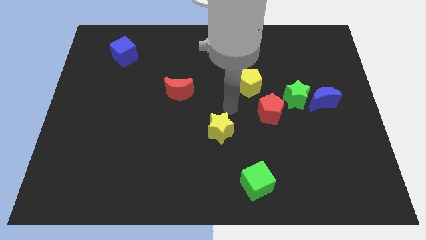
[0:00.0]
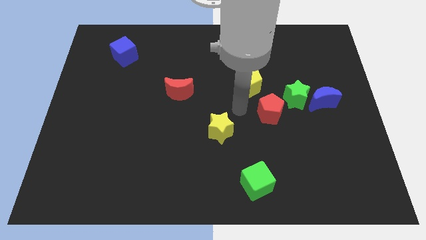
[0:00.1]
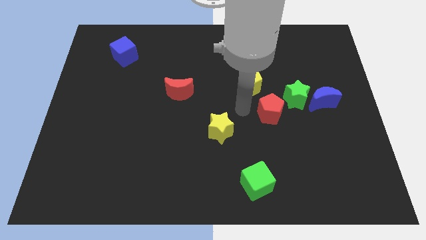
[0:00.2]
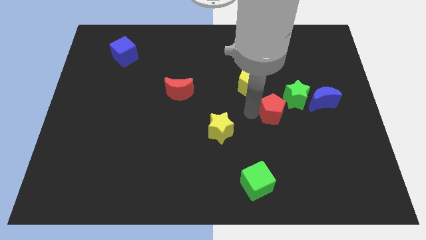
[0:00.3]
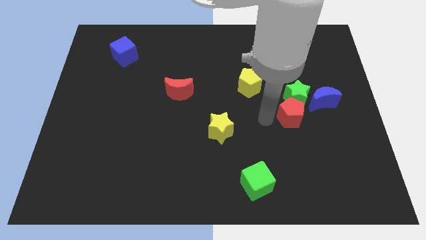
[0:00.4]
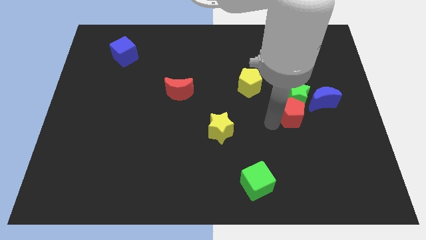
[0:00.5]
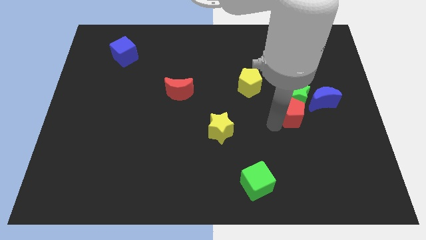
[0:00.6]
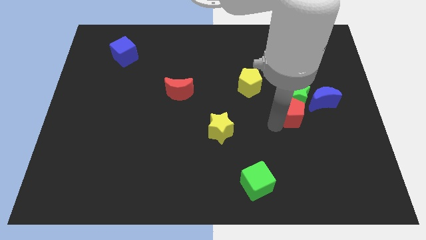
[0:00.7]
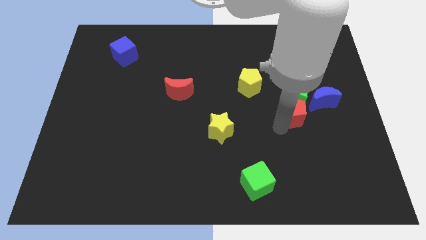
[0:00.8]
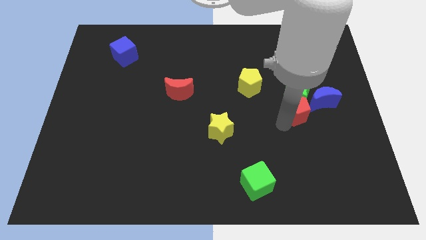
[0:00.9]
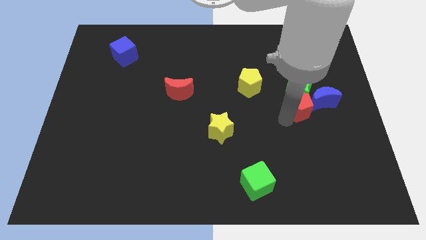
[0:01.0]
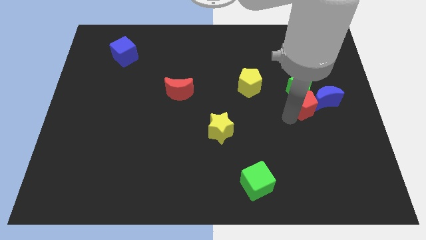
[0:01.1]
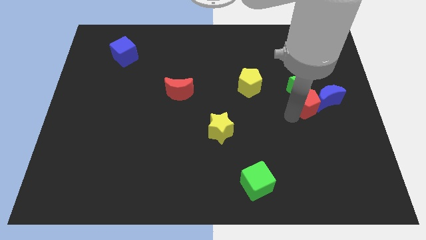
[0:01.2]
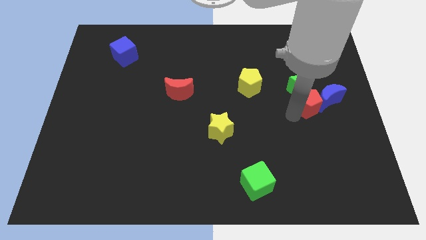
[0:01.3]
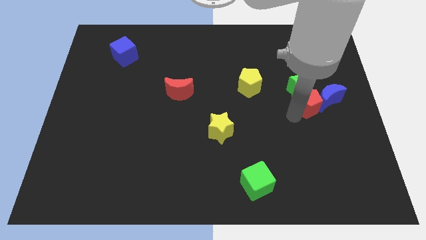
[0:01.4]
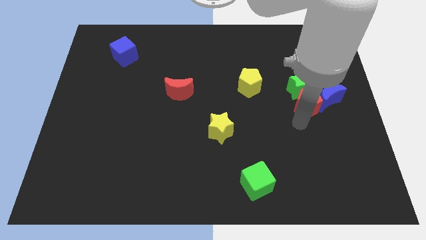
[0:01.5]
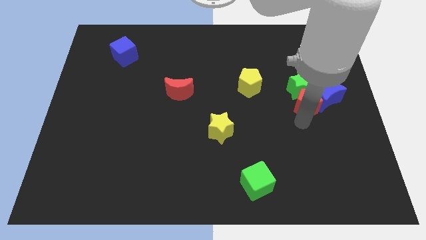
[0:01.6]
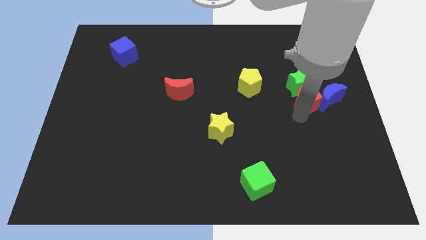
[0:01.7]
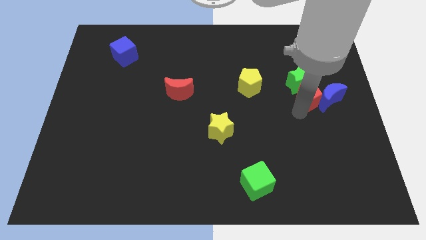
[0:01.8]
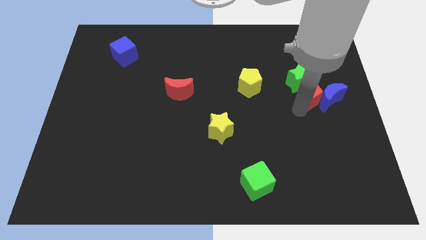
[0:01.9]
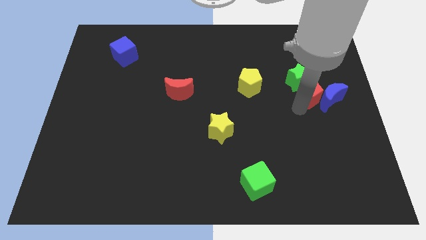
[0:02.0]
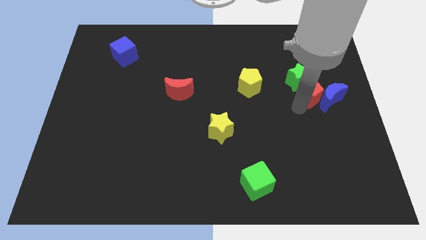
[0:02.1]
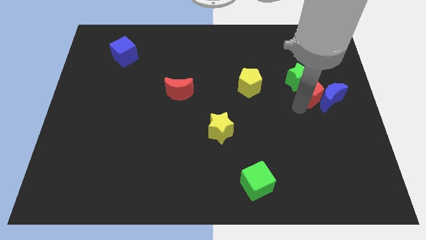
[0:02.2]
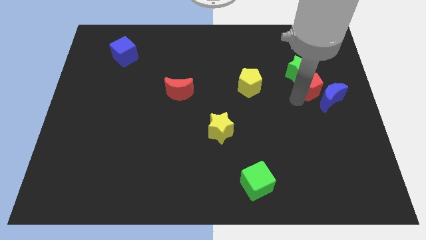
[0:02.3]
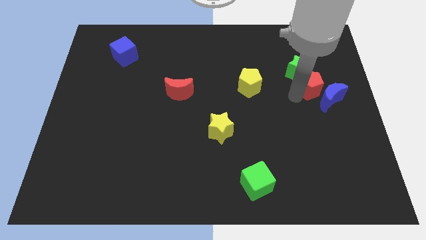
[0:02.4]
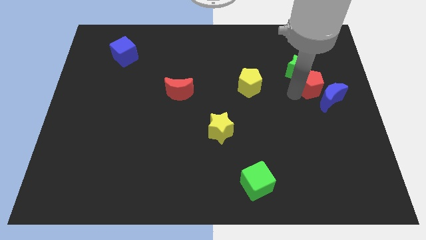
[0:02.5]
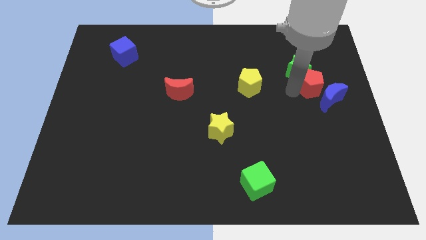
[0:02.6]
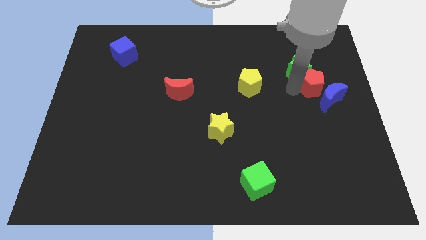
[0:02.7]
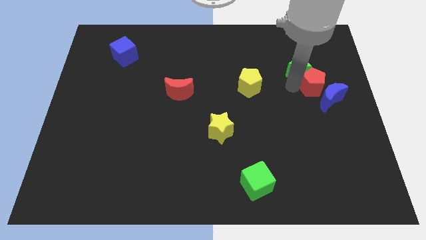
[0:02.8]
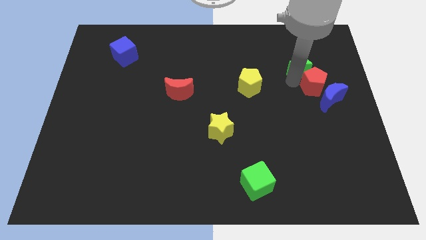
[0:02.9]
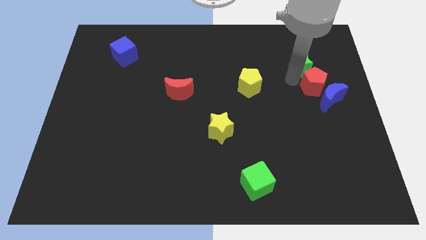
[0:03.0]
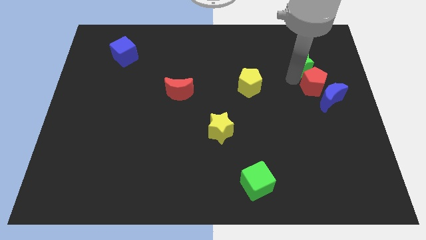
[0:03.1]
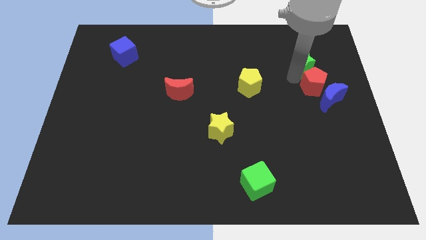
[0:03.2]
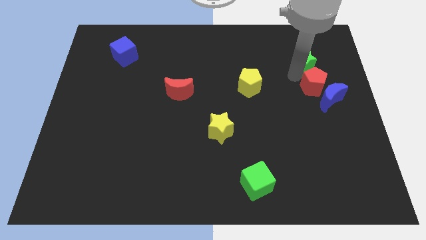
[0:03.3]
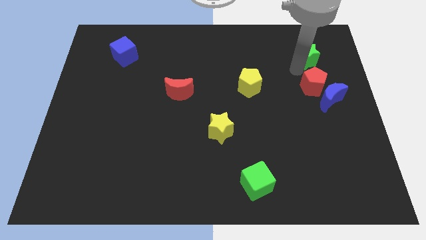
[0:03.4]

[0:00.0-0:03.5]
push the red pentagon and green star to the top side

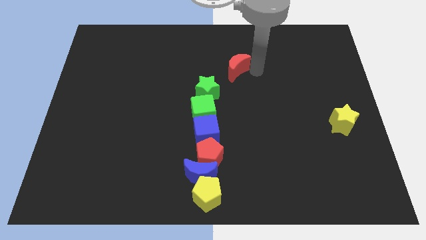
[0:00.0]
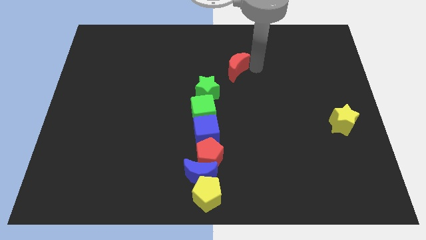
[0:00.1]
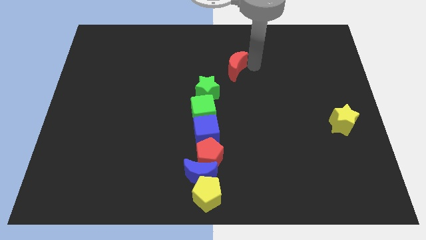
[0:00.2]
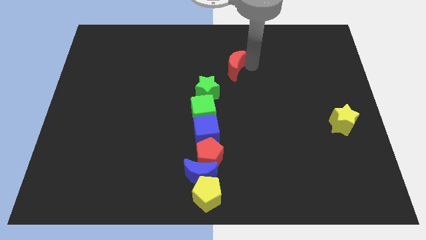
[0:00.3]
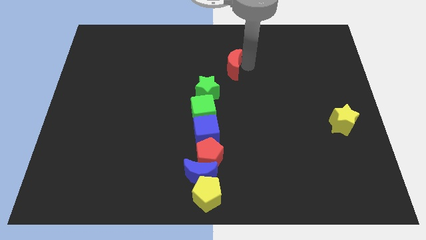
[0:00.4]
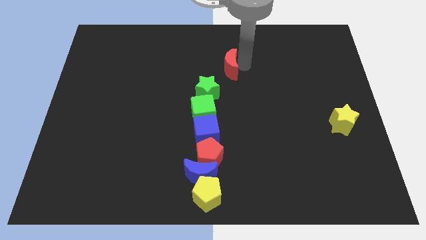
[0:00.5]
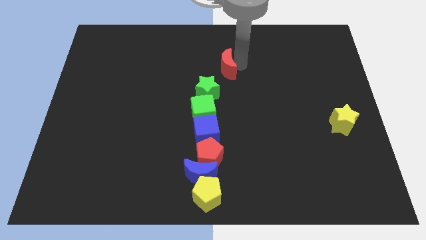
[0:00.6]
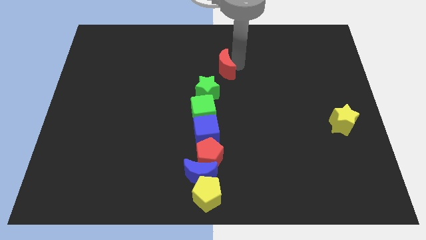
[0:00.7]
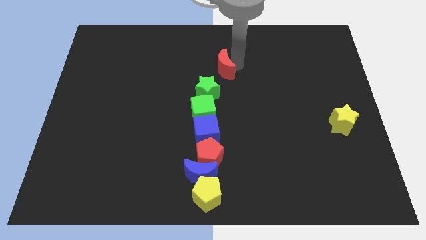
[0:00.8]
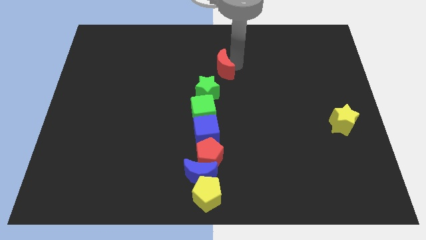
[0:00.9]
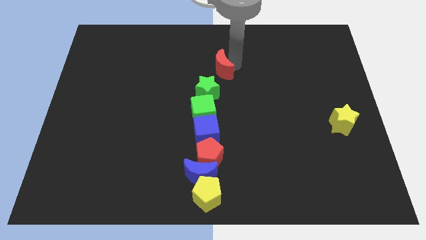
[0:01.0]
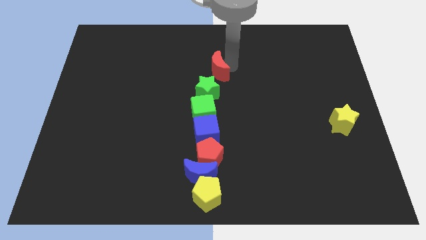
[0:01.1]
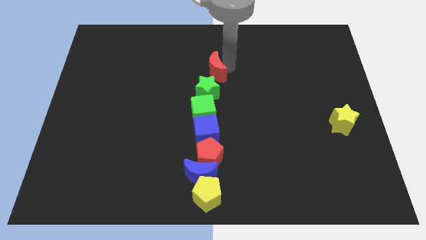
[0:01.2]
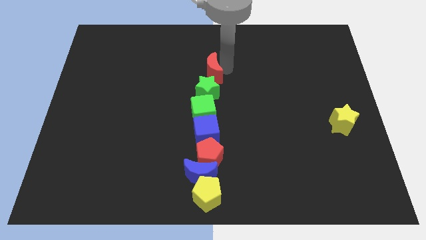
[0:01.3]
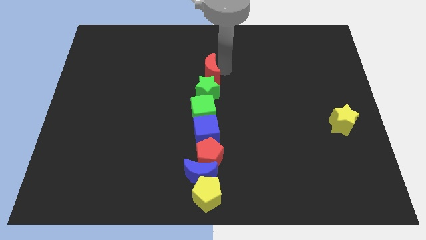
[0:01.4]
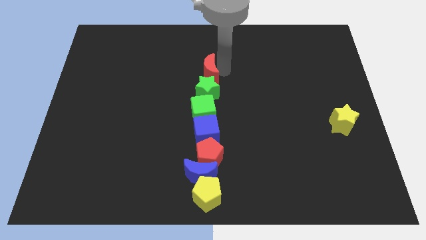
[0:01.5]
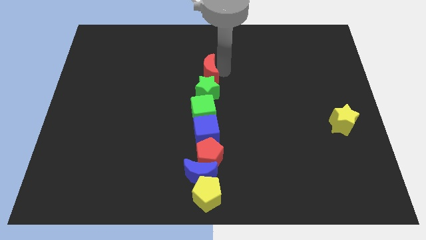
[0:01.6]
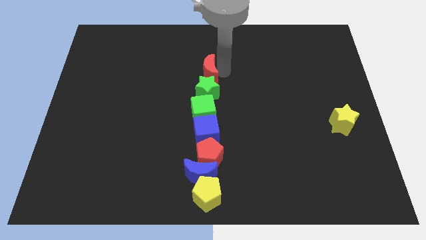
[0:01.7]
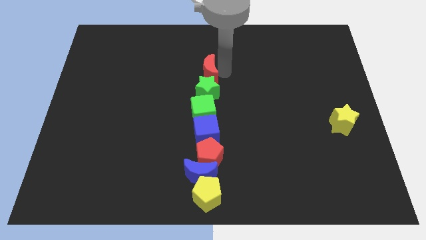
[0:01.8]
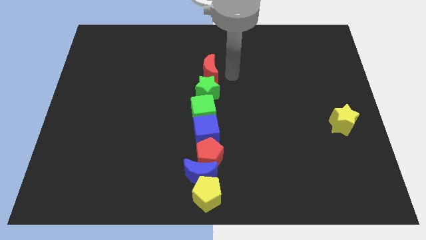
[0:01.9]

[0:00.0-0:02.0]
push the red crescent to the top of green star

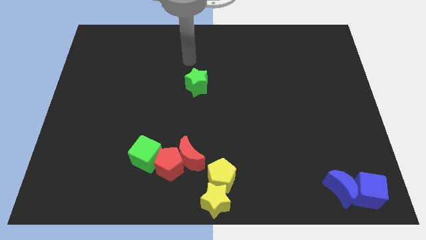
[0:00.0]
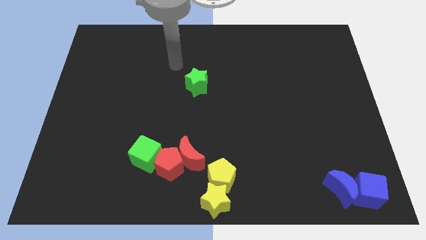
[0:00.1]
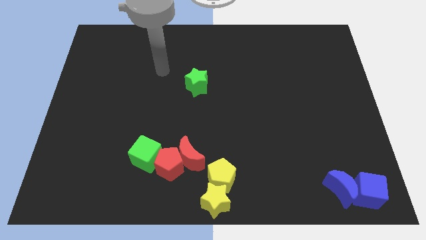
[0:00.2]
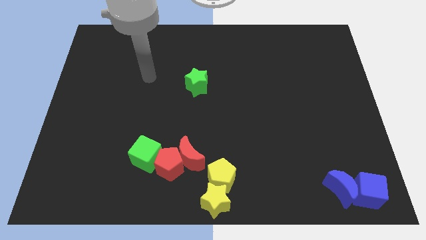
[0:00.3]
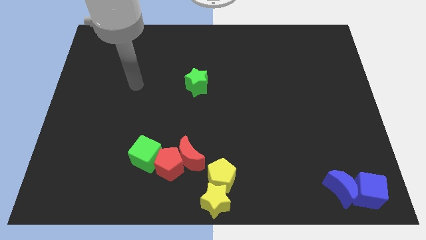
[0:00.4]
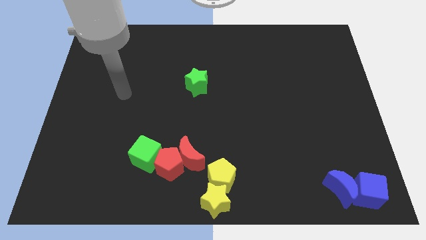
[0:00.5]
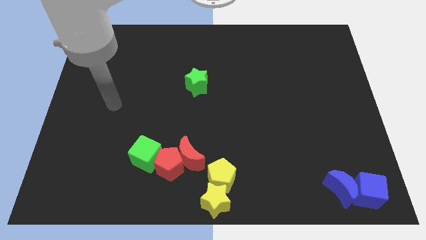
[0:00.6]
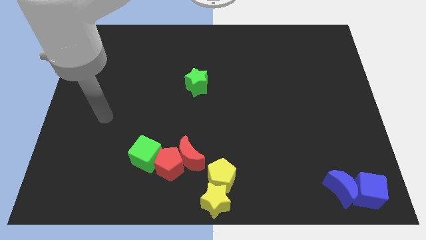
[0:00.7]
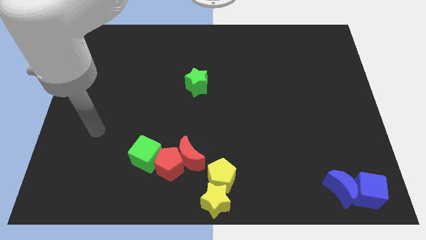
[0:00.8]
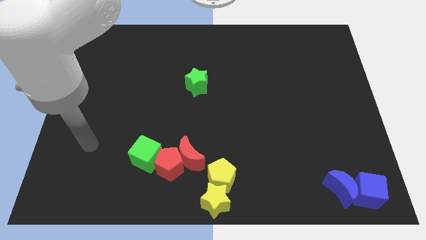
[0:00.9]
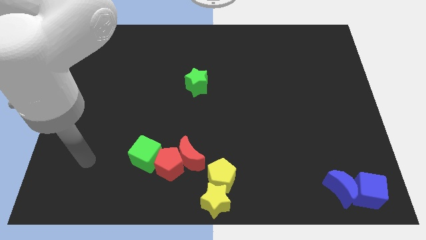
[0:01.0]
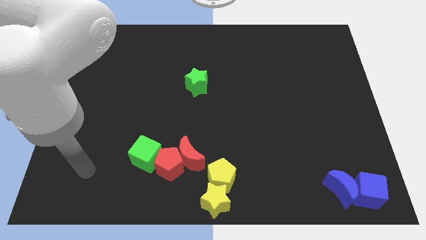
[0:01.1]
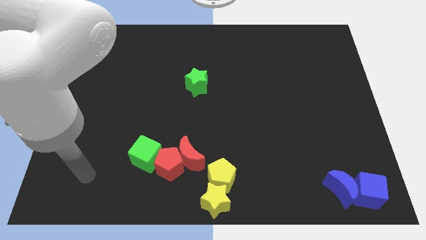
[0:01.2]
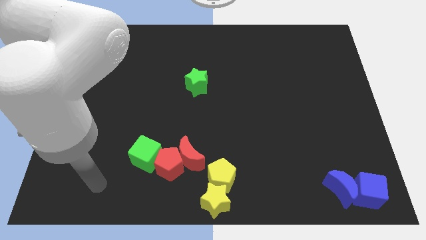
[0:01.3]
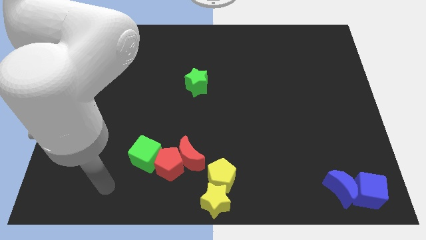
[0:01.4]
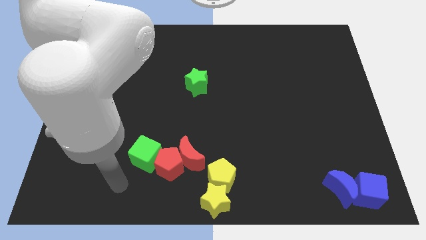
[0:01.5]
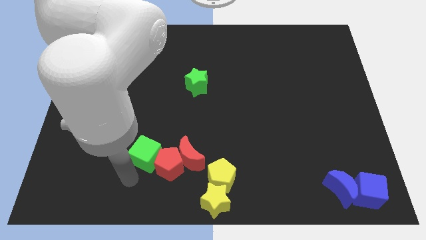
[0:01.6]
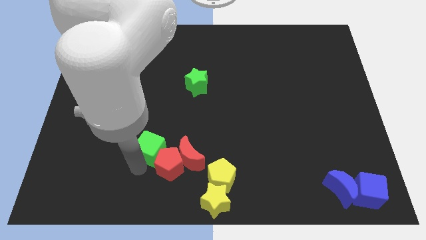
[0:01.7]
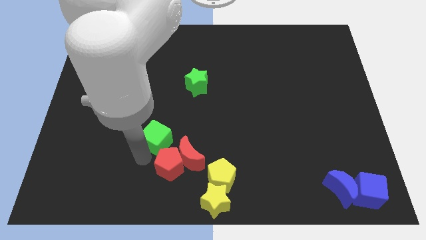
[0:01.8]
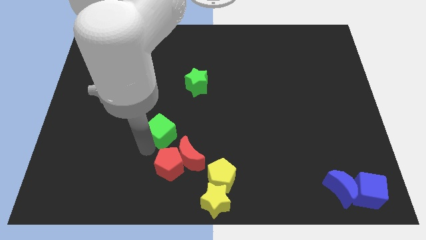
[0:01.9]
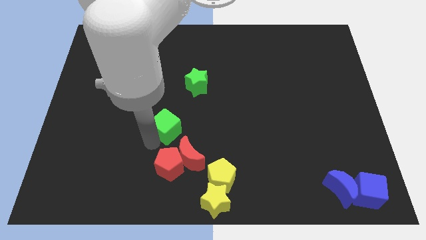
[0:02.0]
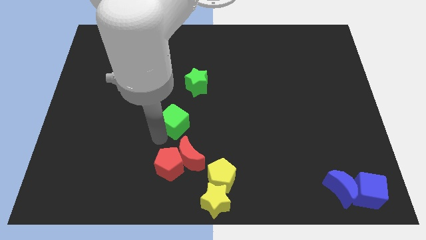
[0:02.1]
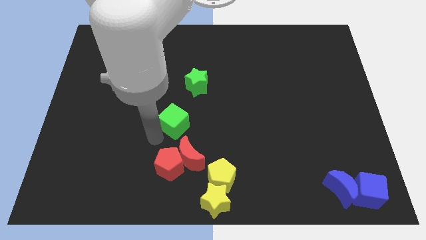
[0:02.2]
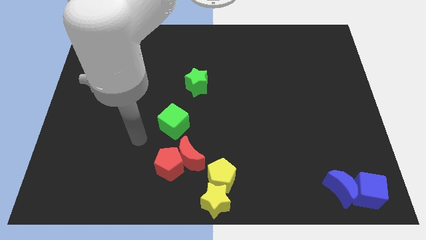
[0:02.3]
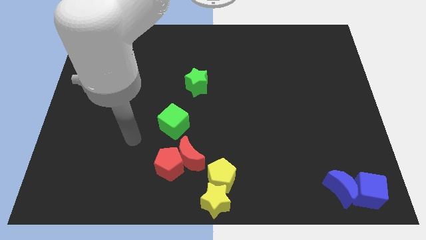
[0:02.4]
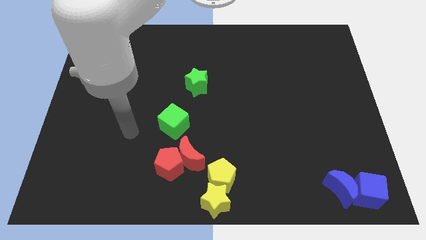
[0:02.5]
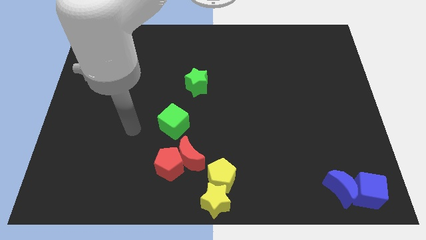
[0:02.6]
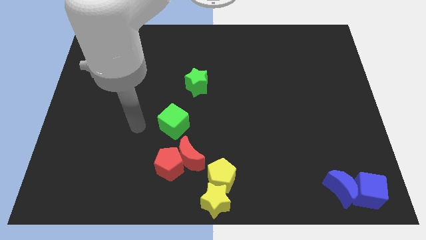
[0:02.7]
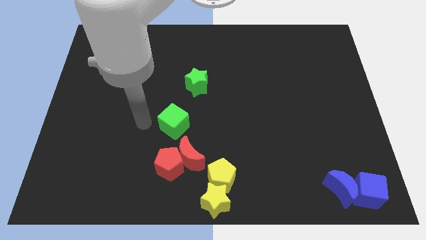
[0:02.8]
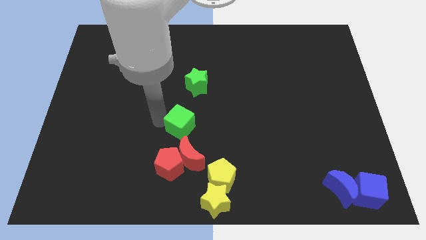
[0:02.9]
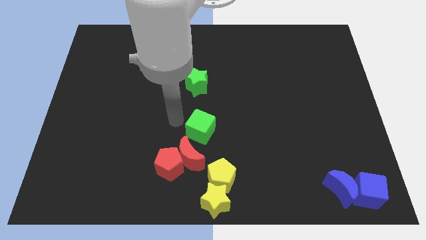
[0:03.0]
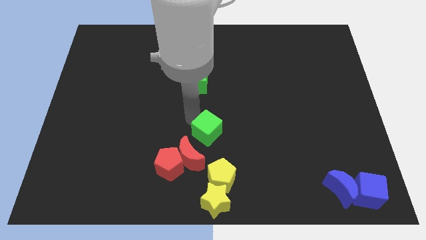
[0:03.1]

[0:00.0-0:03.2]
place the green cube below the green star

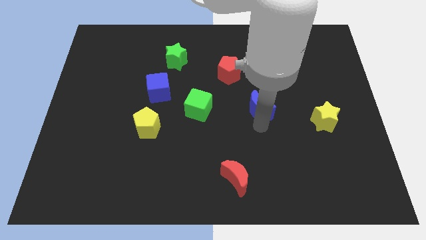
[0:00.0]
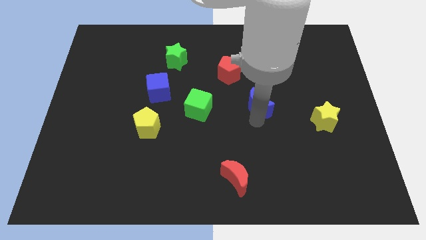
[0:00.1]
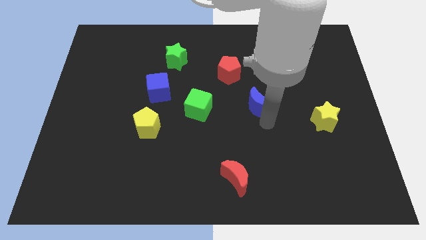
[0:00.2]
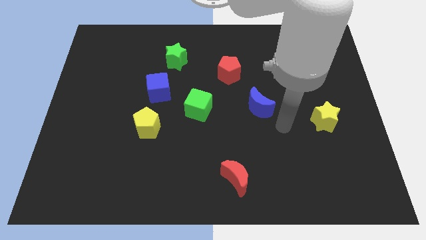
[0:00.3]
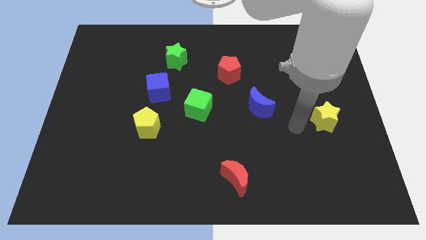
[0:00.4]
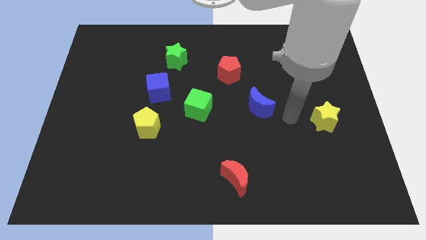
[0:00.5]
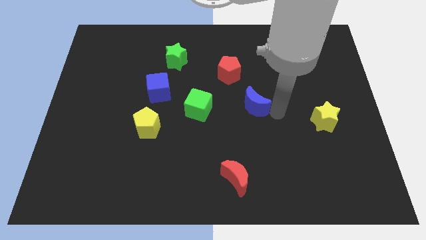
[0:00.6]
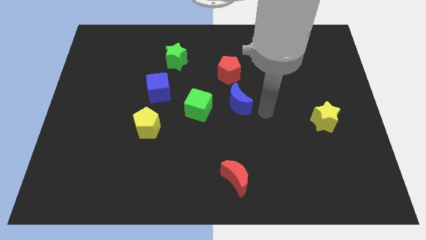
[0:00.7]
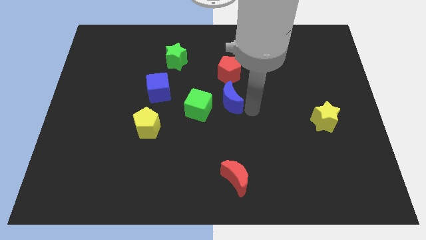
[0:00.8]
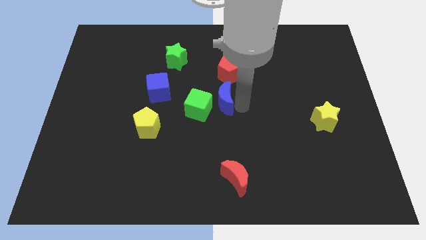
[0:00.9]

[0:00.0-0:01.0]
place blue moon at the bottom of red pentagon
